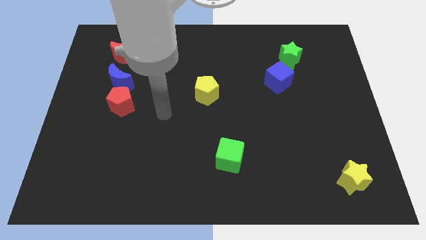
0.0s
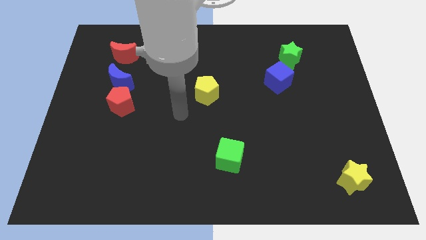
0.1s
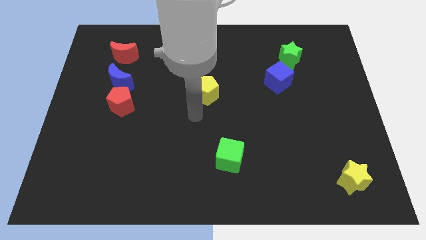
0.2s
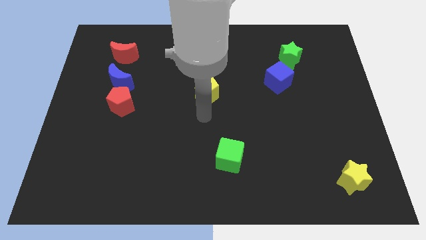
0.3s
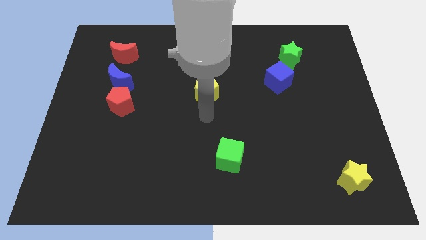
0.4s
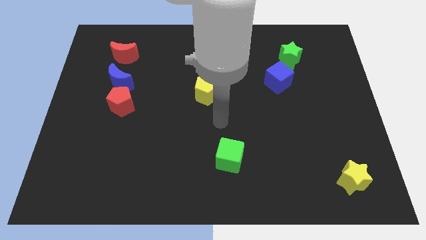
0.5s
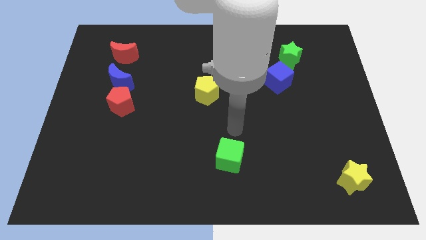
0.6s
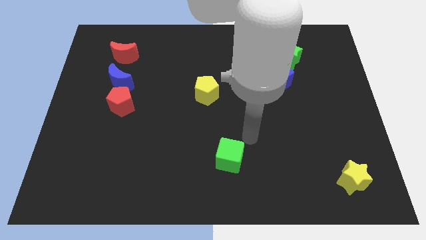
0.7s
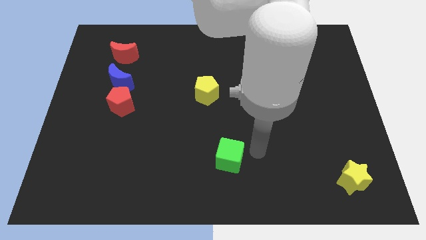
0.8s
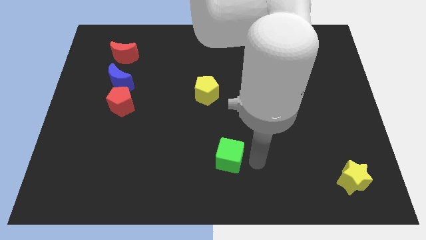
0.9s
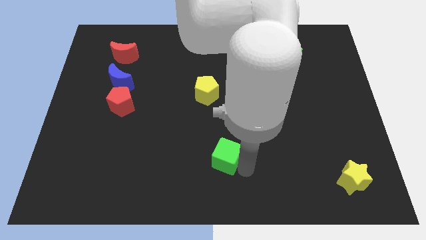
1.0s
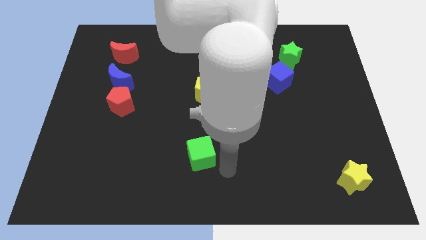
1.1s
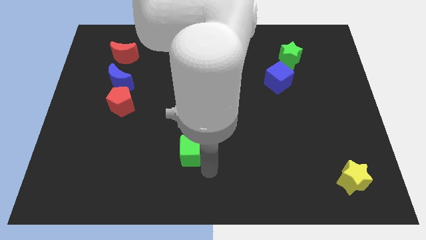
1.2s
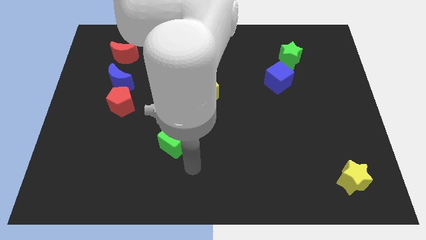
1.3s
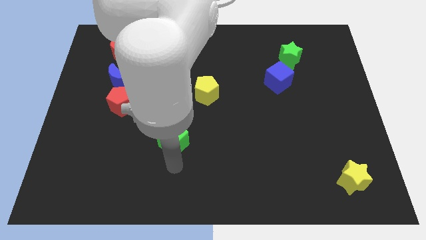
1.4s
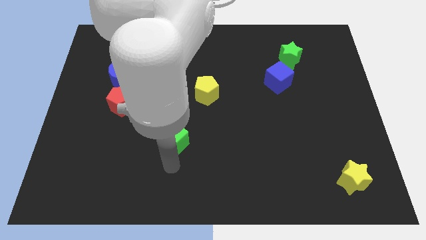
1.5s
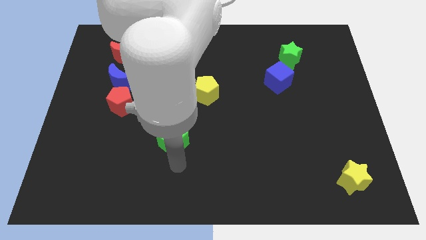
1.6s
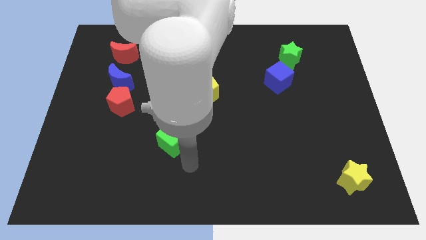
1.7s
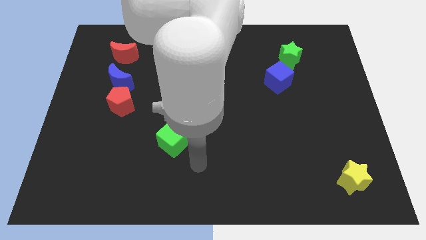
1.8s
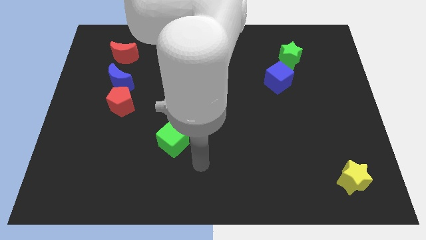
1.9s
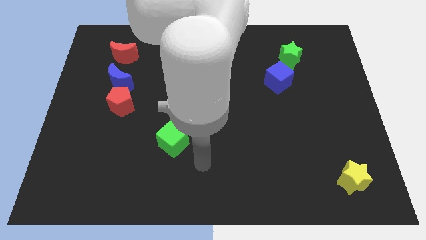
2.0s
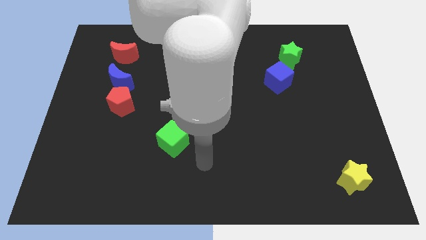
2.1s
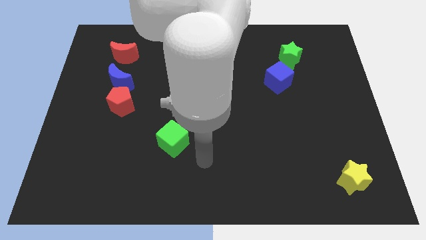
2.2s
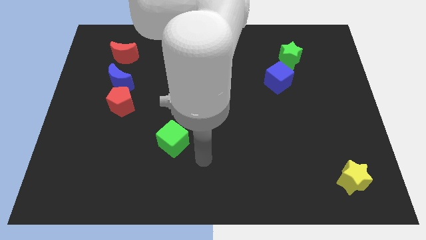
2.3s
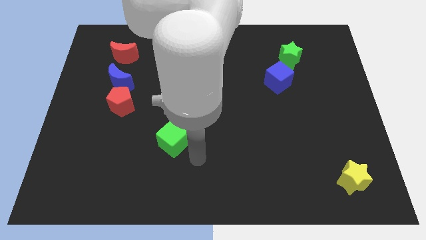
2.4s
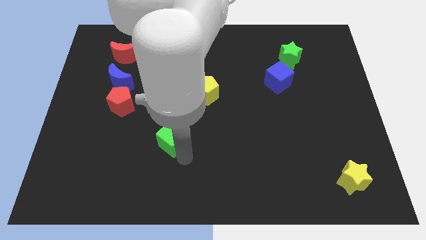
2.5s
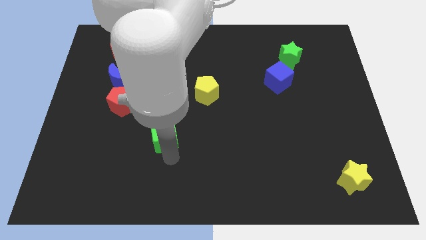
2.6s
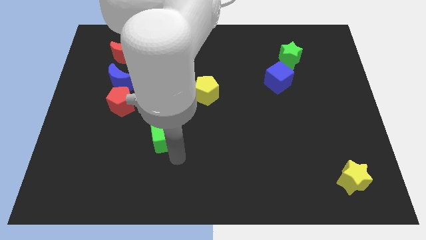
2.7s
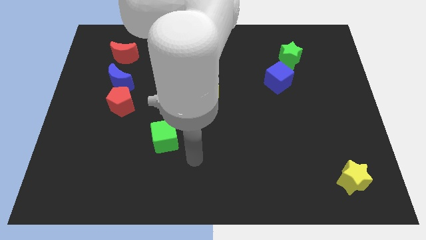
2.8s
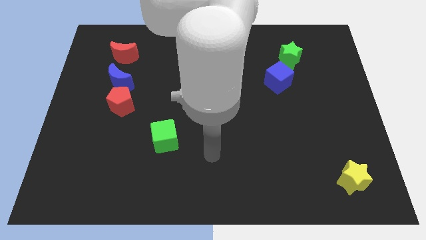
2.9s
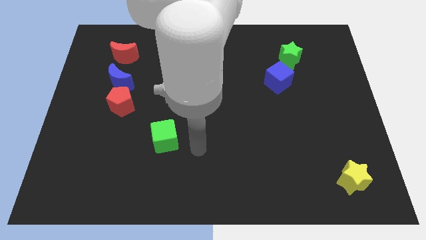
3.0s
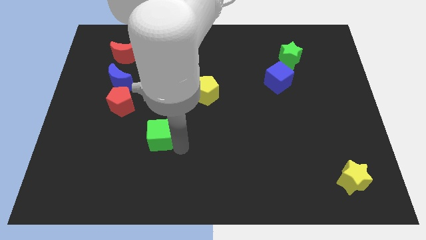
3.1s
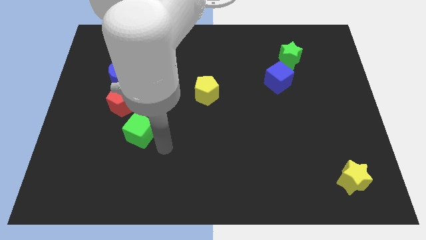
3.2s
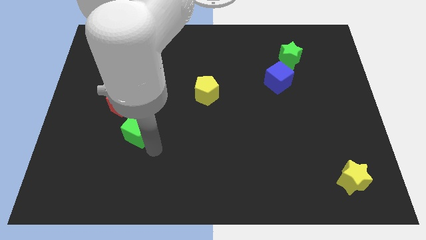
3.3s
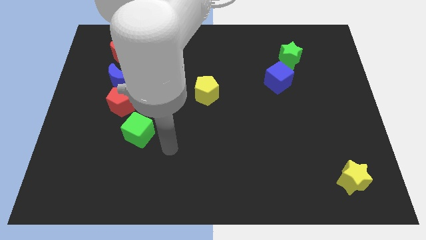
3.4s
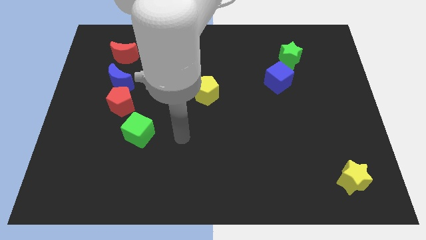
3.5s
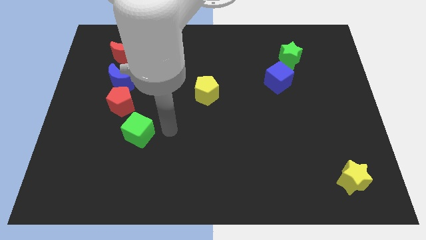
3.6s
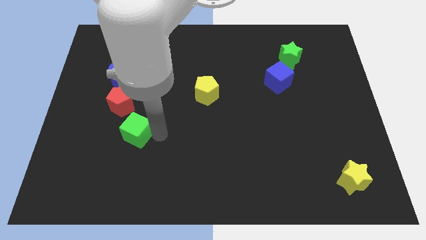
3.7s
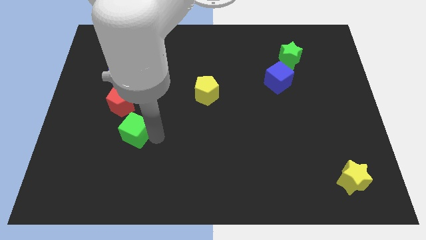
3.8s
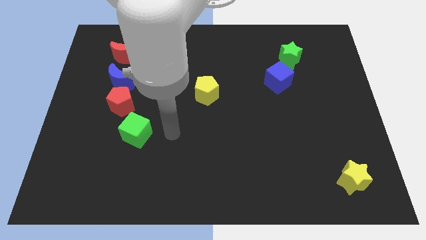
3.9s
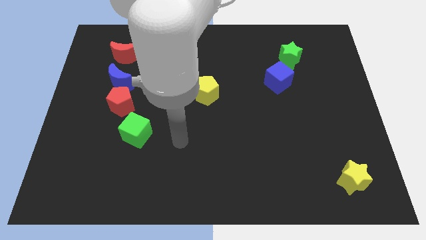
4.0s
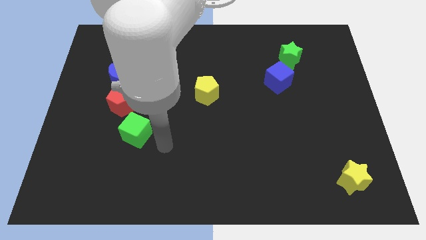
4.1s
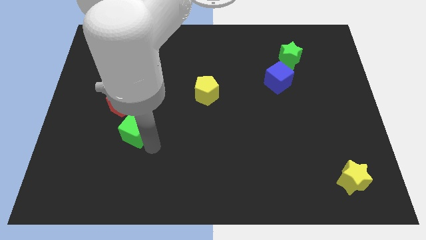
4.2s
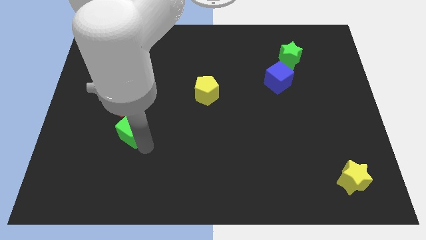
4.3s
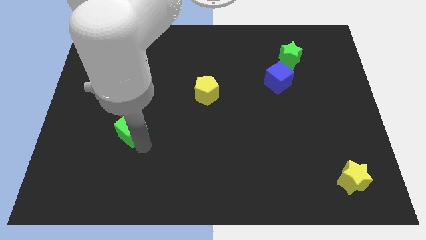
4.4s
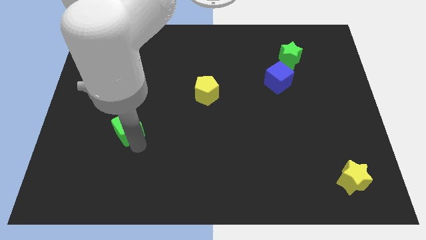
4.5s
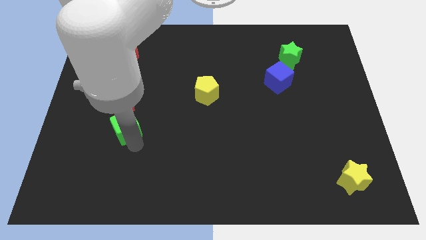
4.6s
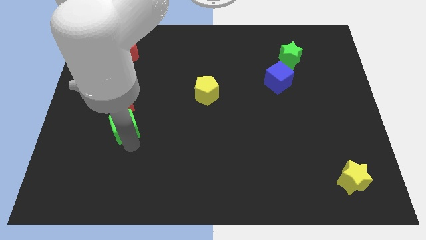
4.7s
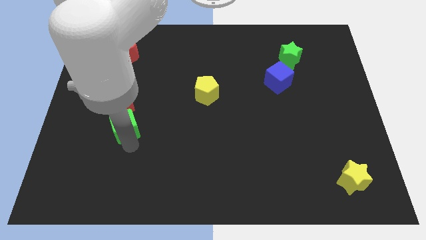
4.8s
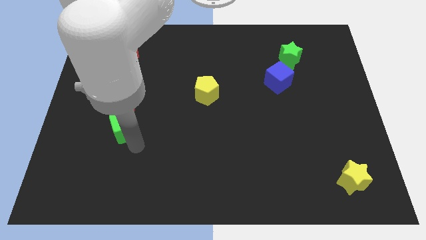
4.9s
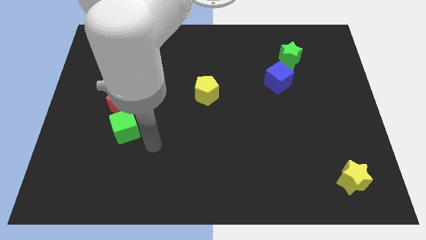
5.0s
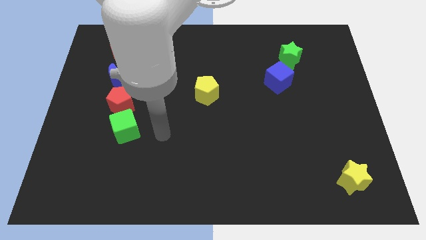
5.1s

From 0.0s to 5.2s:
place the green cube beside the red pentagon to form a line

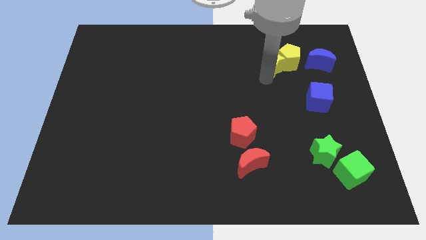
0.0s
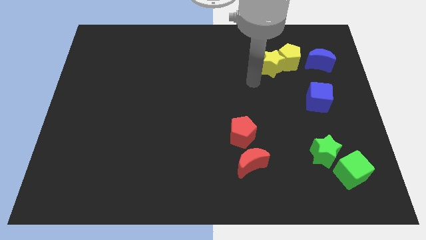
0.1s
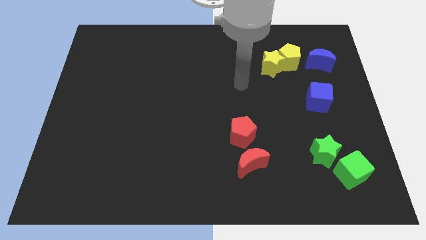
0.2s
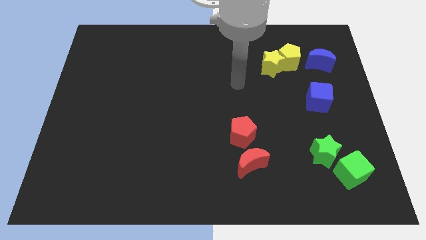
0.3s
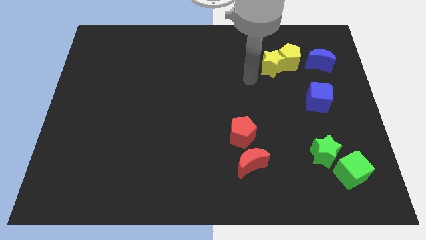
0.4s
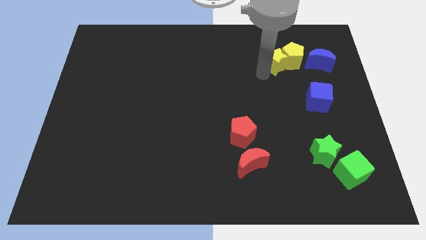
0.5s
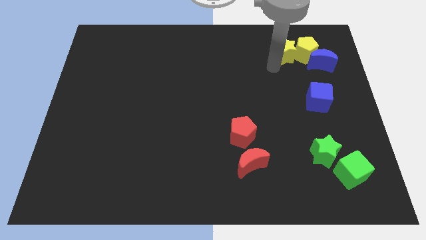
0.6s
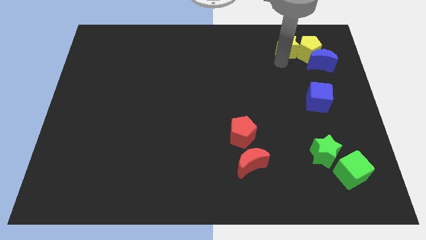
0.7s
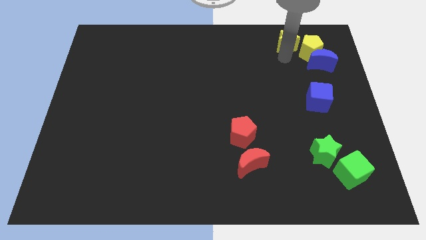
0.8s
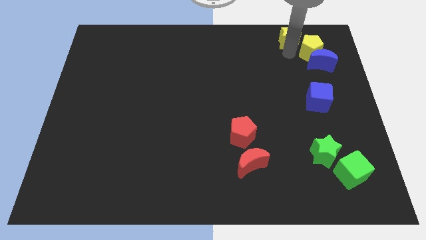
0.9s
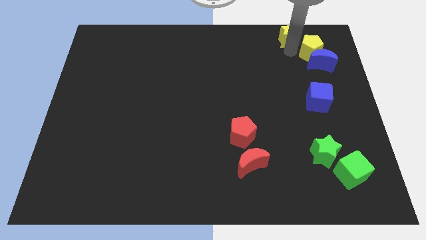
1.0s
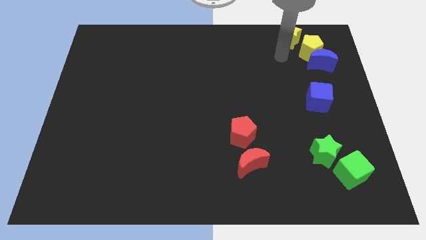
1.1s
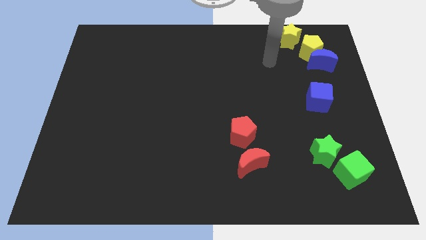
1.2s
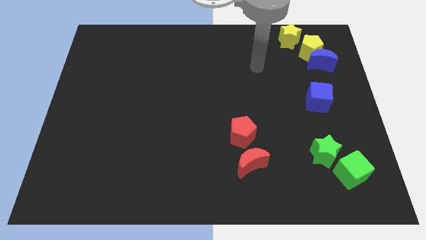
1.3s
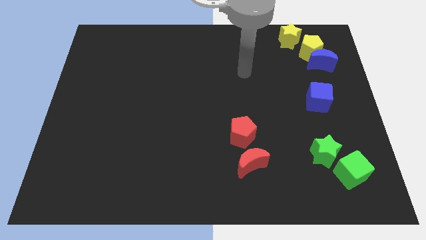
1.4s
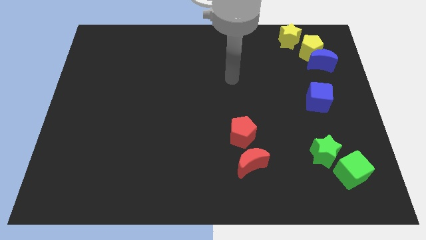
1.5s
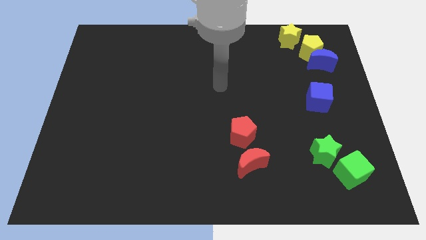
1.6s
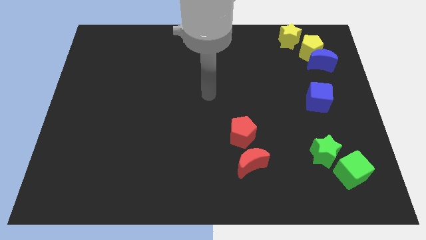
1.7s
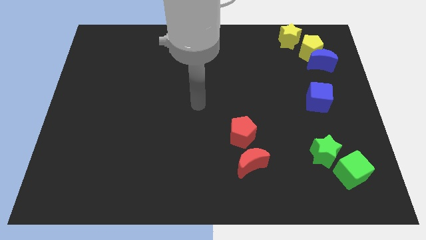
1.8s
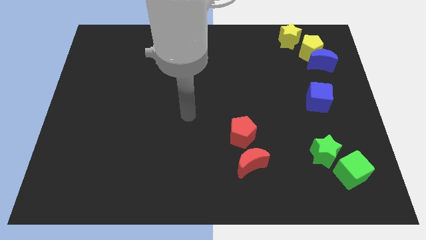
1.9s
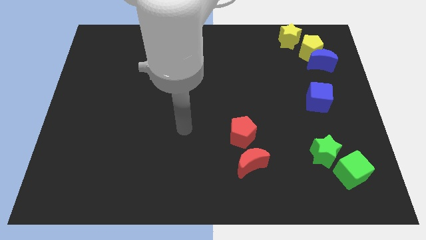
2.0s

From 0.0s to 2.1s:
place the yellow star at the top right corner of the board

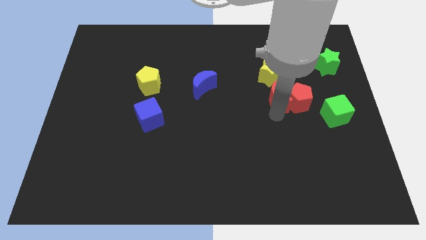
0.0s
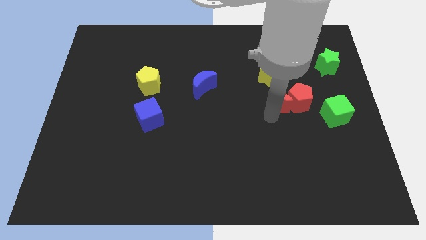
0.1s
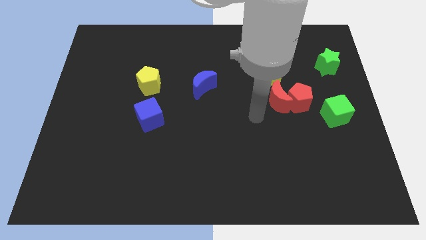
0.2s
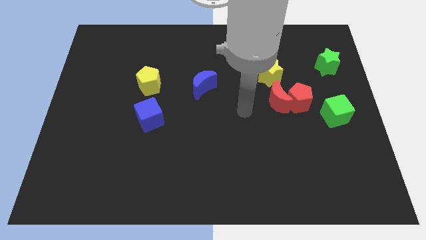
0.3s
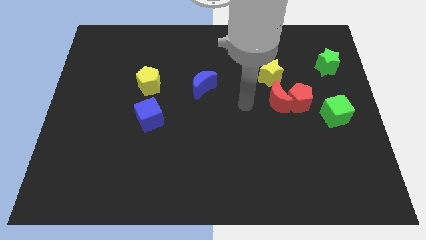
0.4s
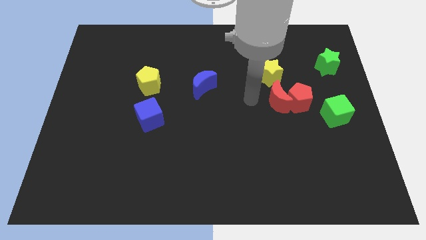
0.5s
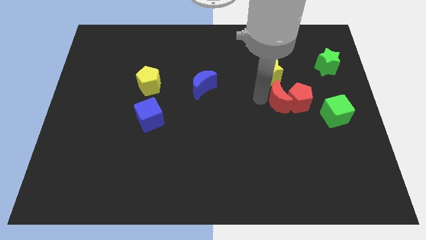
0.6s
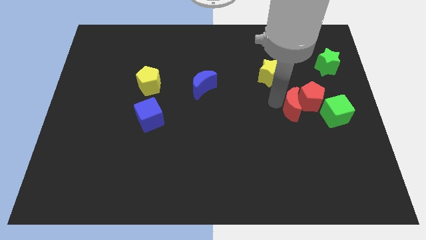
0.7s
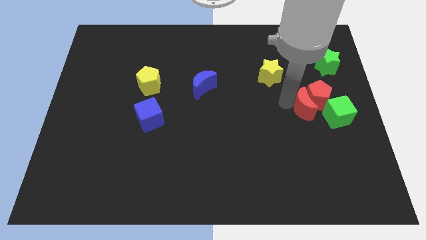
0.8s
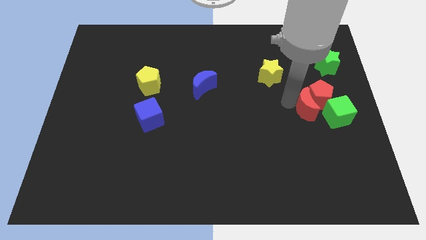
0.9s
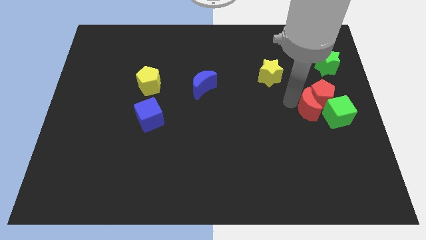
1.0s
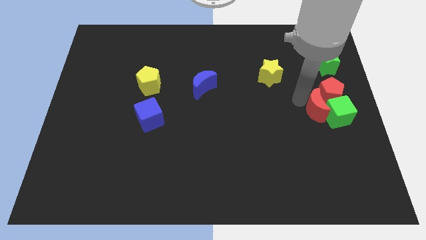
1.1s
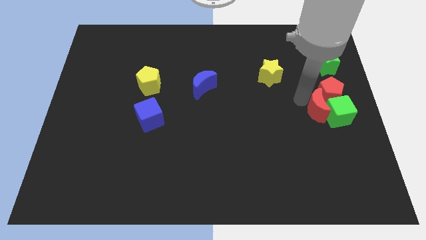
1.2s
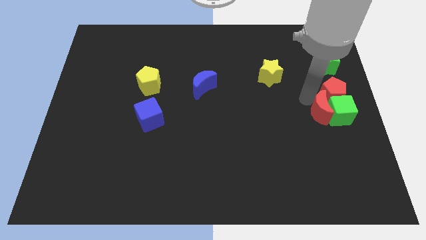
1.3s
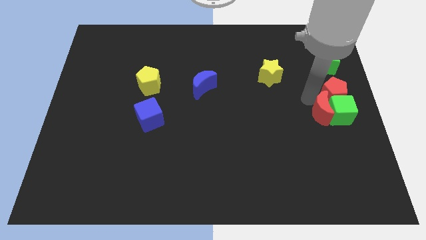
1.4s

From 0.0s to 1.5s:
push the red pentagon and green square with red crescent

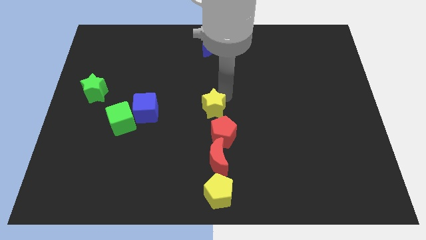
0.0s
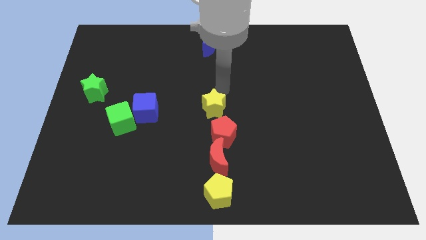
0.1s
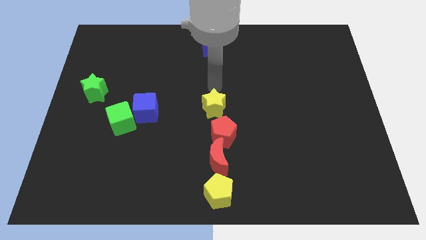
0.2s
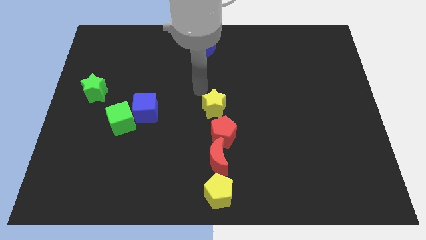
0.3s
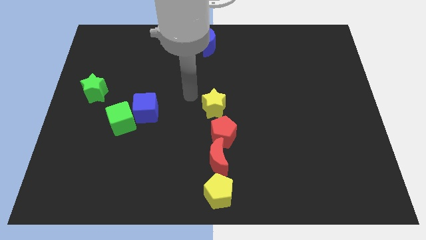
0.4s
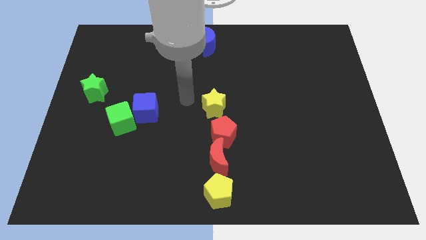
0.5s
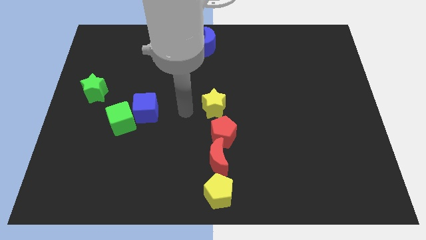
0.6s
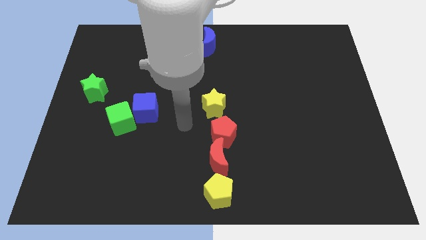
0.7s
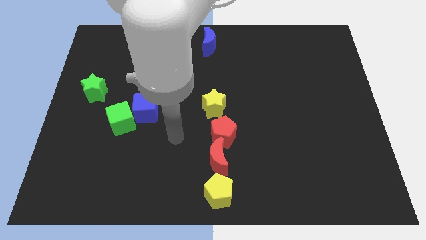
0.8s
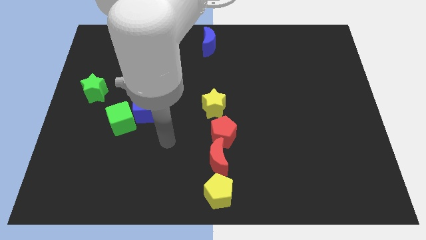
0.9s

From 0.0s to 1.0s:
move your arm away from the yellow star
